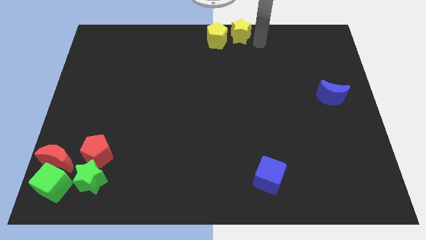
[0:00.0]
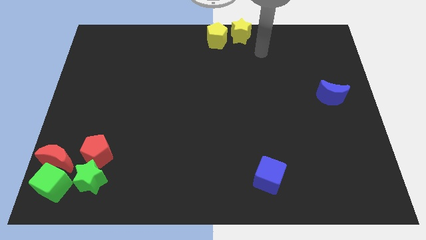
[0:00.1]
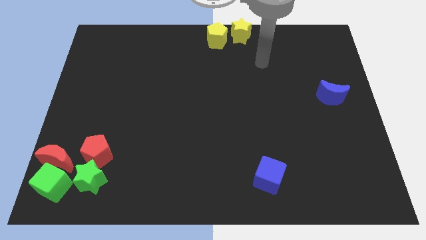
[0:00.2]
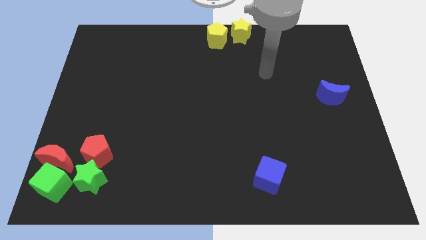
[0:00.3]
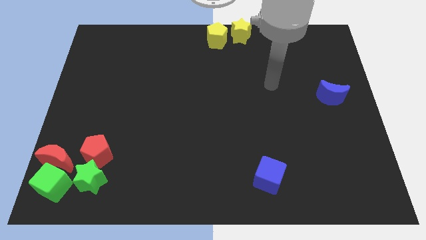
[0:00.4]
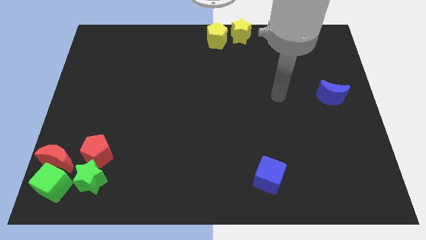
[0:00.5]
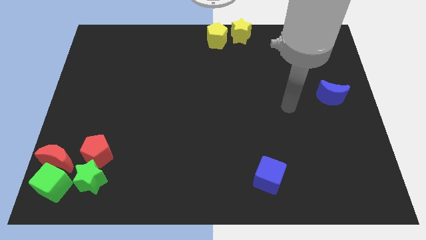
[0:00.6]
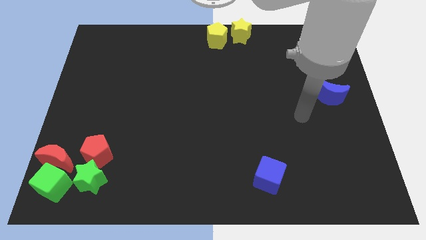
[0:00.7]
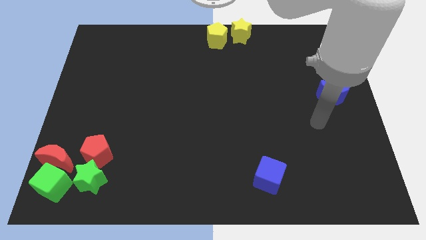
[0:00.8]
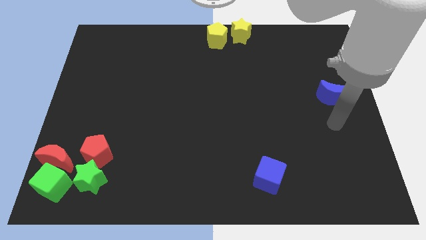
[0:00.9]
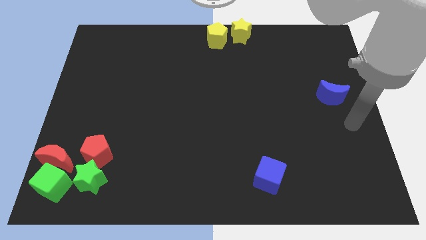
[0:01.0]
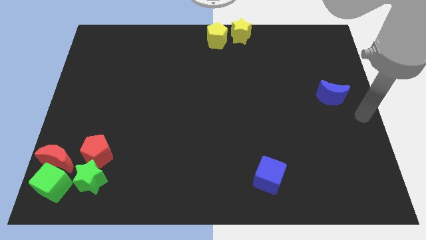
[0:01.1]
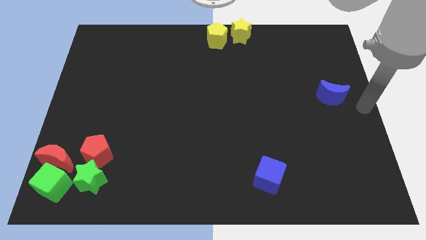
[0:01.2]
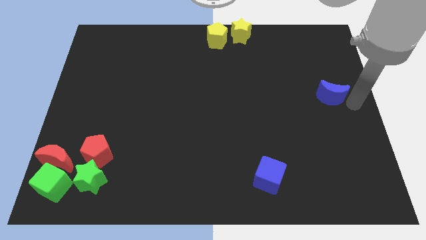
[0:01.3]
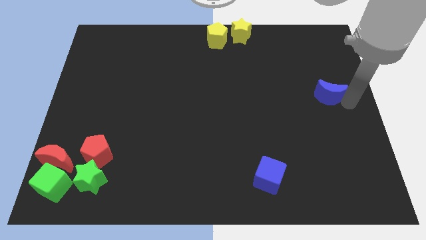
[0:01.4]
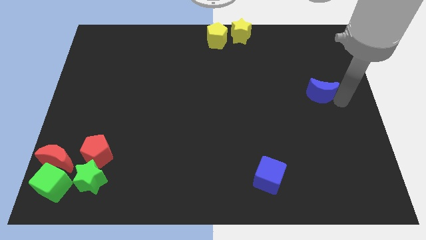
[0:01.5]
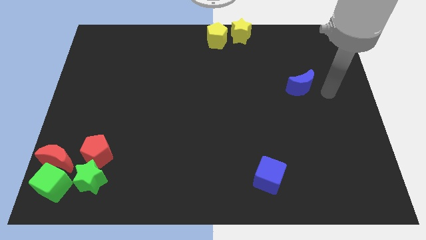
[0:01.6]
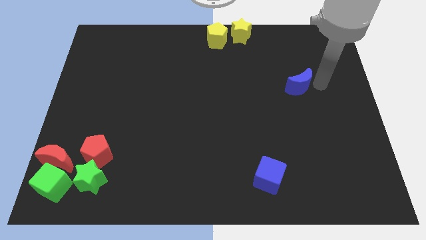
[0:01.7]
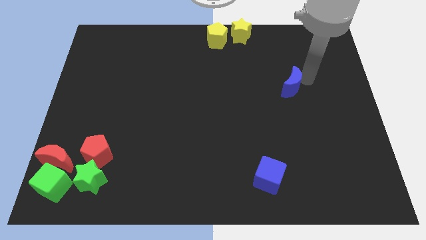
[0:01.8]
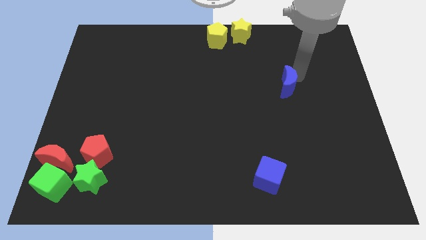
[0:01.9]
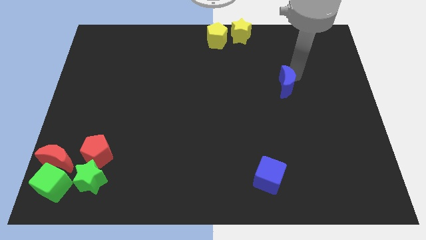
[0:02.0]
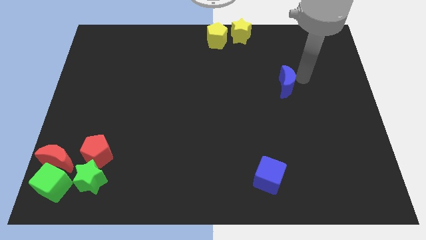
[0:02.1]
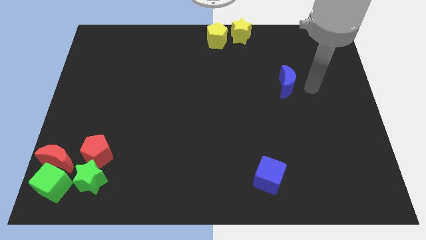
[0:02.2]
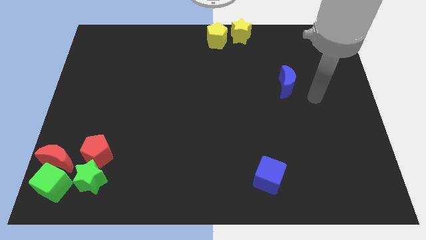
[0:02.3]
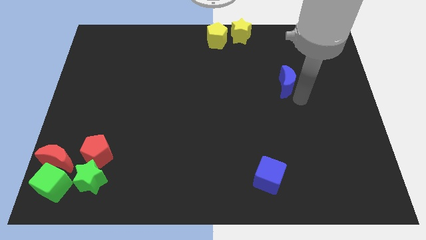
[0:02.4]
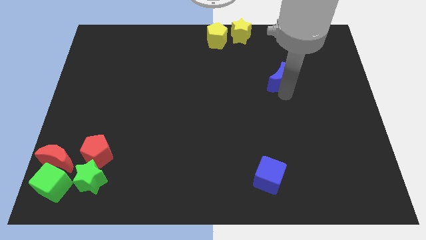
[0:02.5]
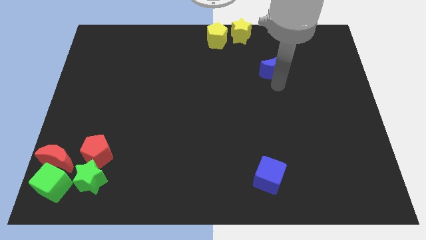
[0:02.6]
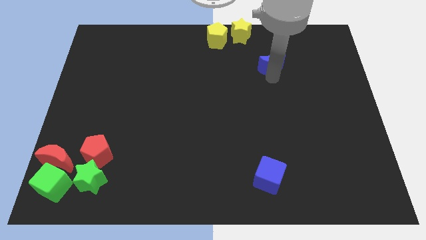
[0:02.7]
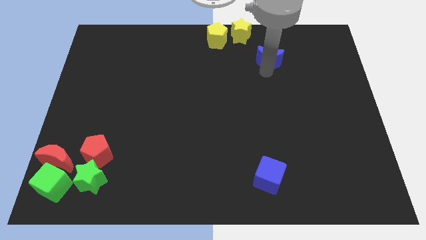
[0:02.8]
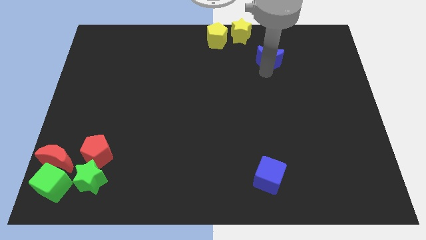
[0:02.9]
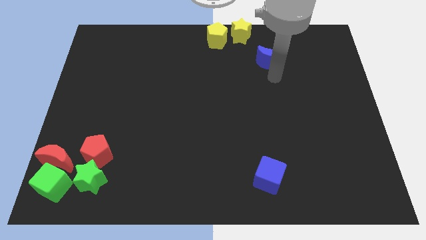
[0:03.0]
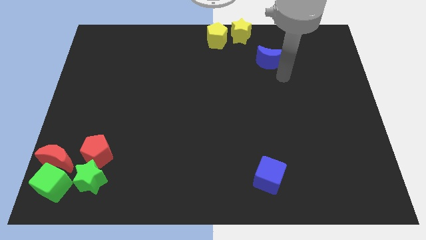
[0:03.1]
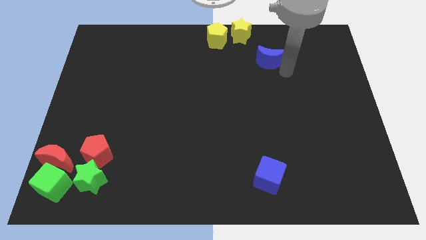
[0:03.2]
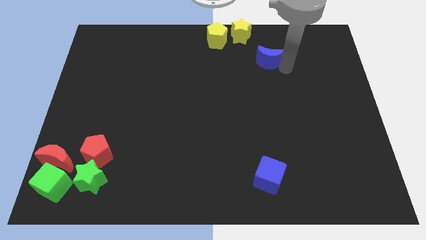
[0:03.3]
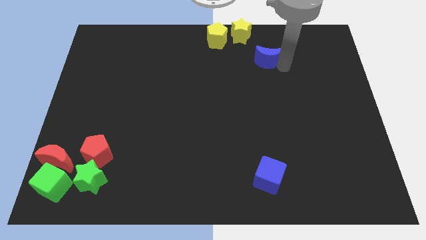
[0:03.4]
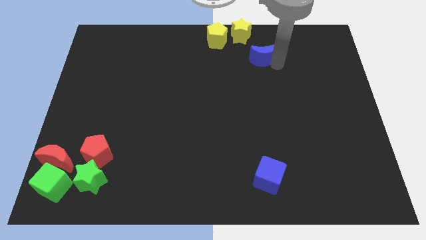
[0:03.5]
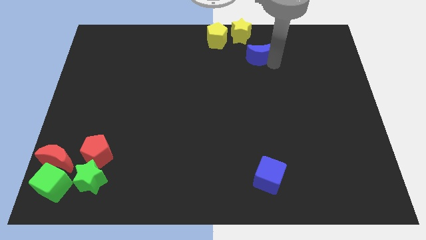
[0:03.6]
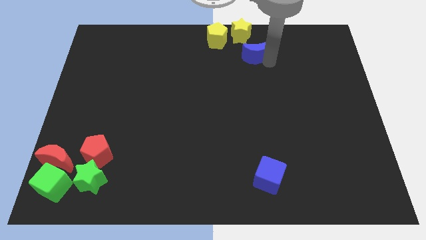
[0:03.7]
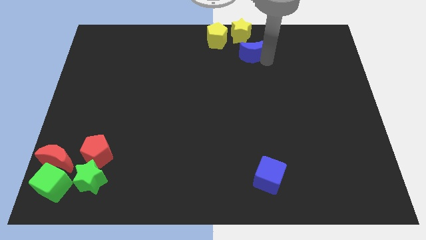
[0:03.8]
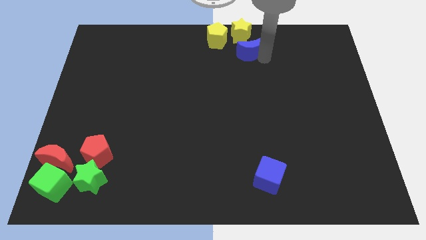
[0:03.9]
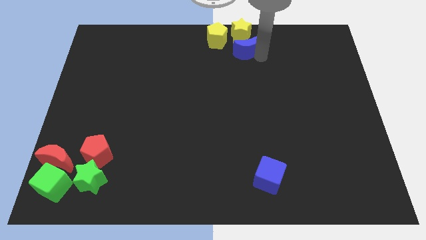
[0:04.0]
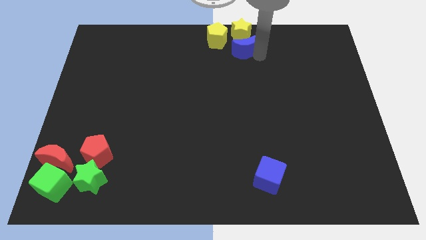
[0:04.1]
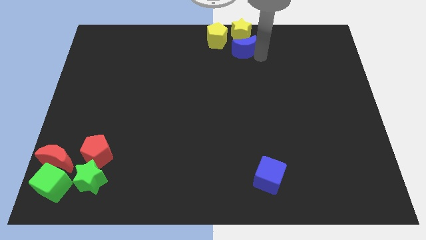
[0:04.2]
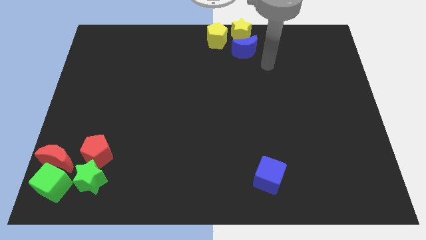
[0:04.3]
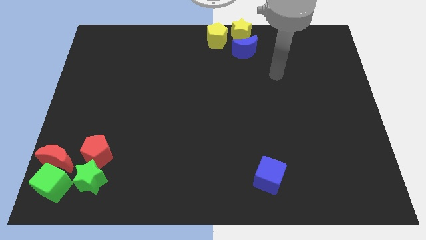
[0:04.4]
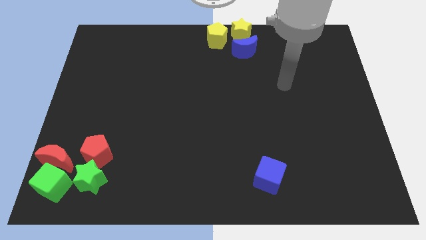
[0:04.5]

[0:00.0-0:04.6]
place the blue crescent below the yellow star

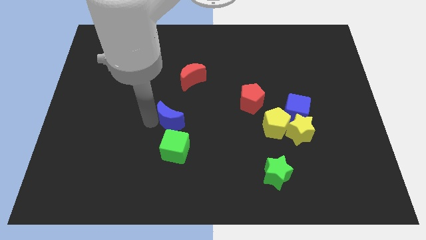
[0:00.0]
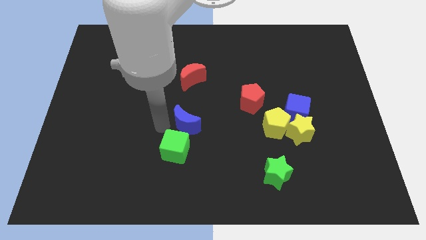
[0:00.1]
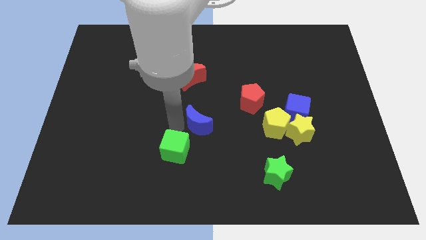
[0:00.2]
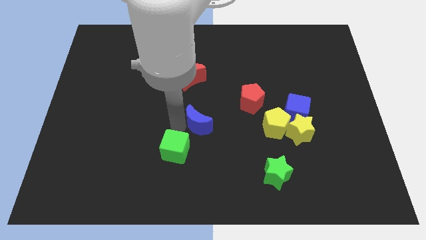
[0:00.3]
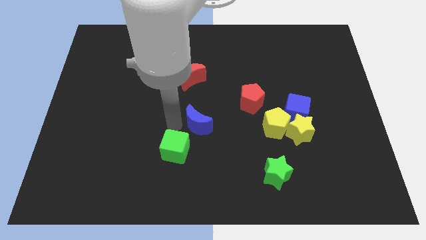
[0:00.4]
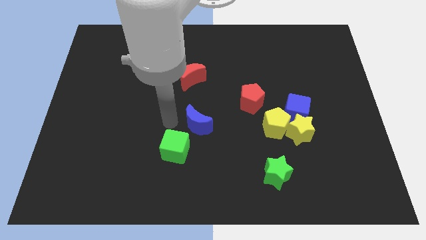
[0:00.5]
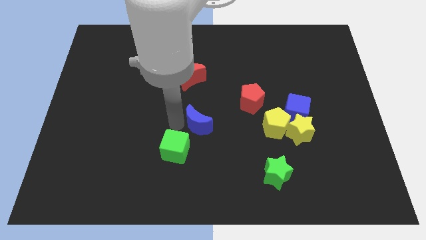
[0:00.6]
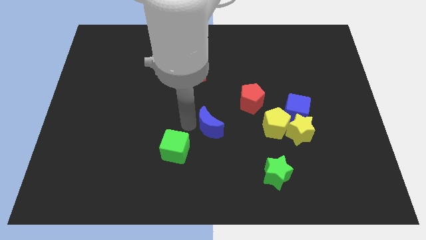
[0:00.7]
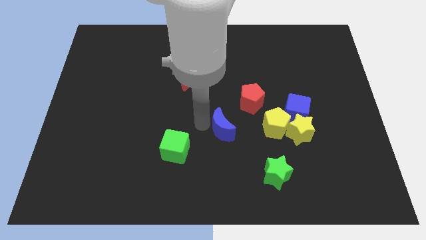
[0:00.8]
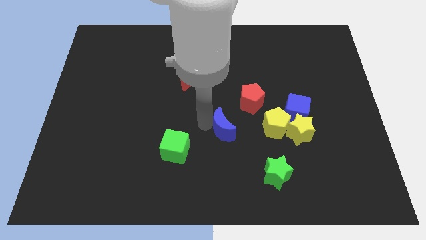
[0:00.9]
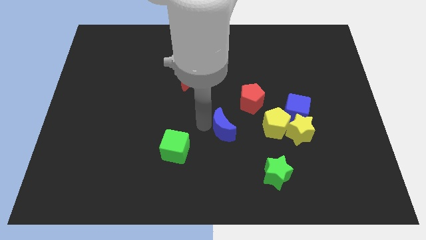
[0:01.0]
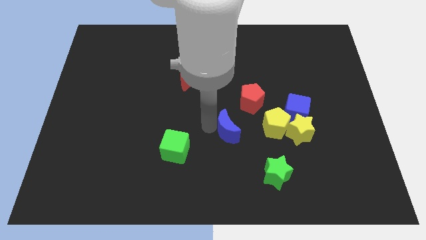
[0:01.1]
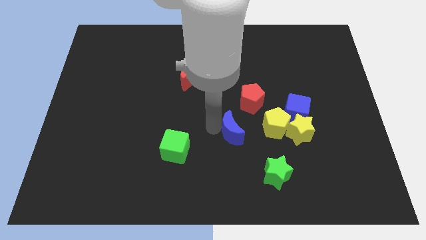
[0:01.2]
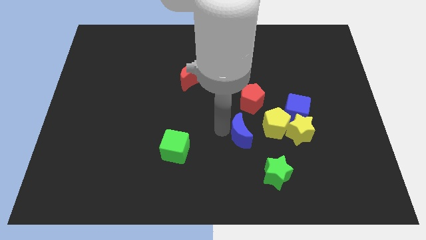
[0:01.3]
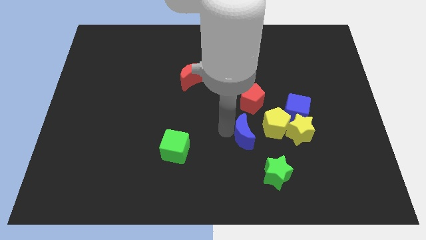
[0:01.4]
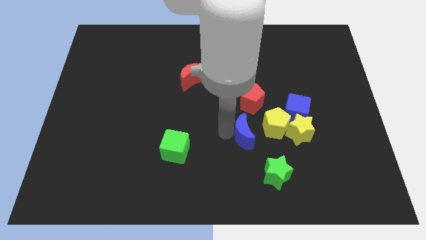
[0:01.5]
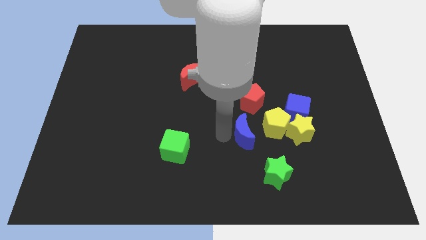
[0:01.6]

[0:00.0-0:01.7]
move blue moon to the bottom of the red pentagon

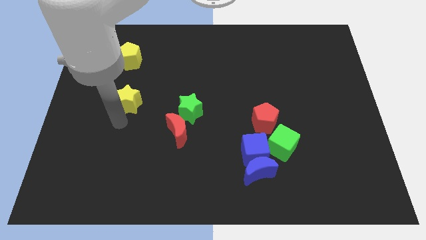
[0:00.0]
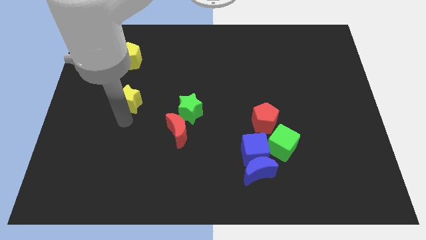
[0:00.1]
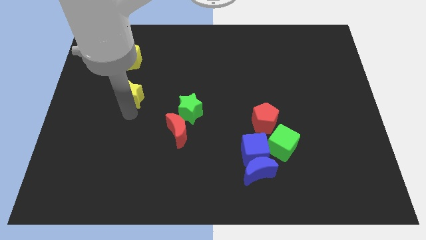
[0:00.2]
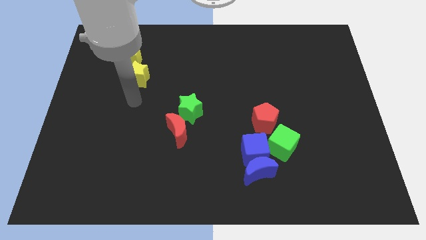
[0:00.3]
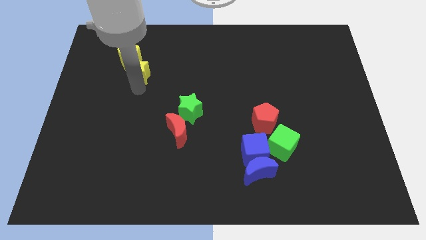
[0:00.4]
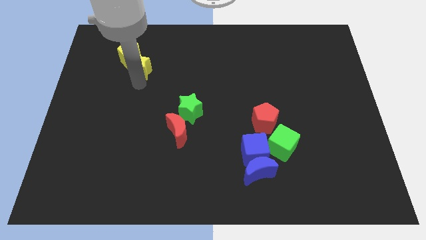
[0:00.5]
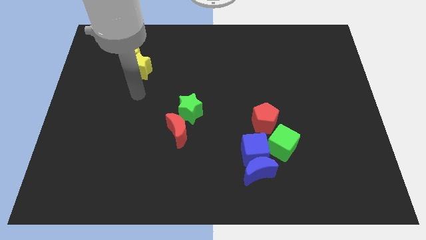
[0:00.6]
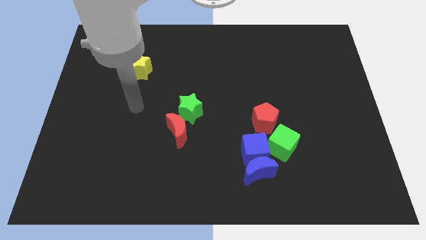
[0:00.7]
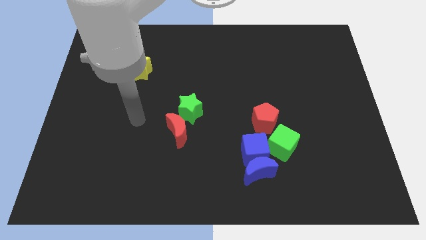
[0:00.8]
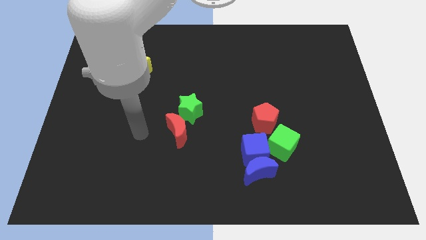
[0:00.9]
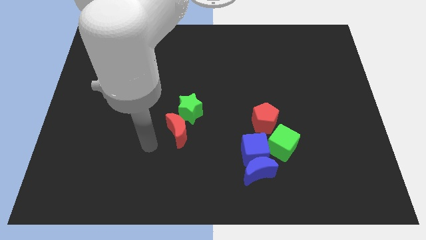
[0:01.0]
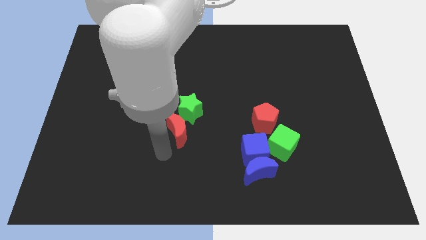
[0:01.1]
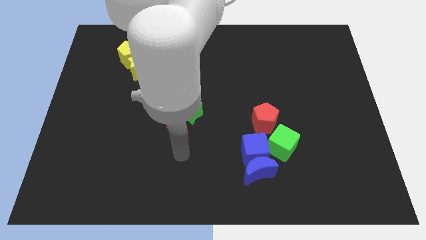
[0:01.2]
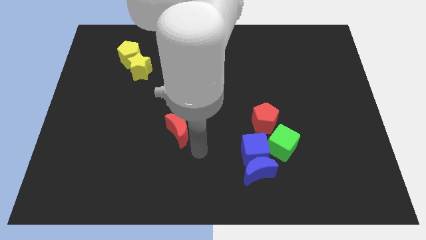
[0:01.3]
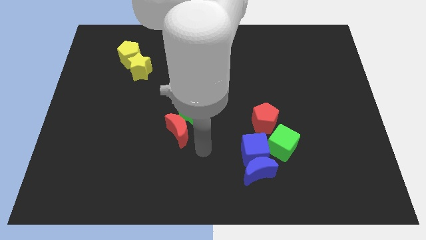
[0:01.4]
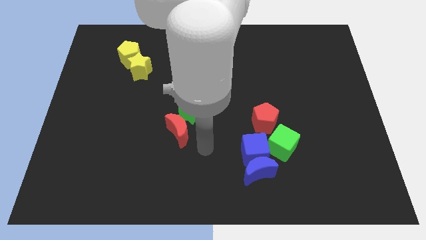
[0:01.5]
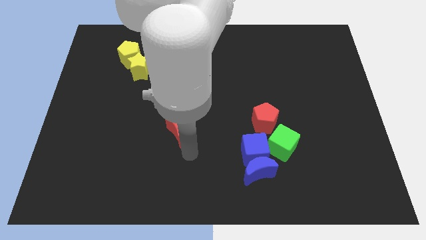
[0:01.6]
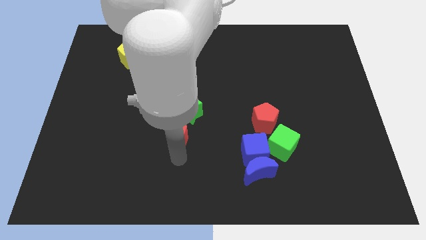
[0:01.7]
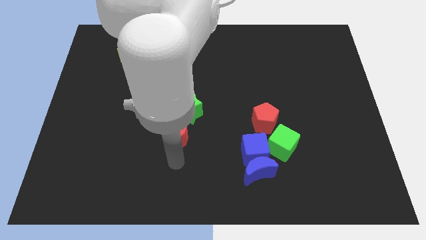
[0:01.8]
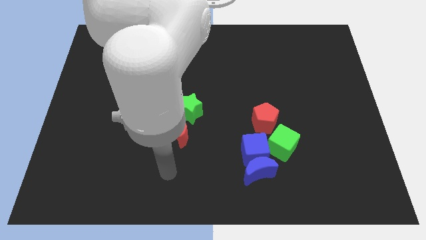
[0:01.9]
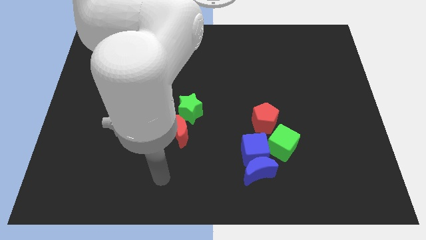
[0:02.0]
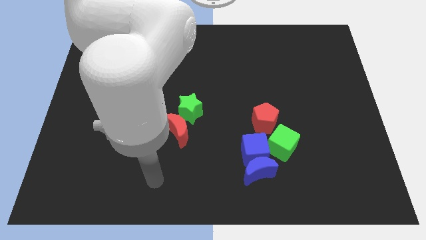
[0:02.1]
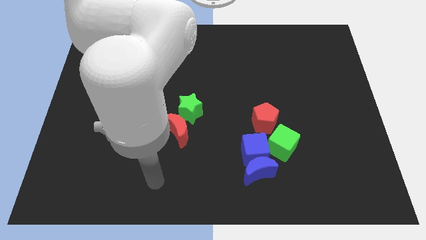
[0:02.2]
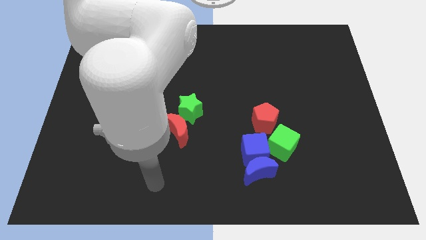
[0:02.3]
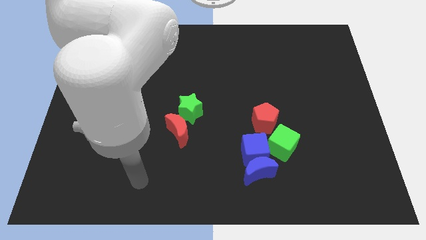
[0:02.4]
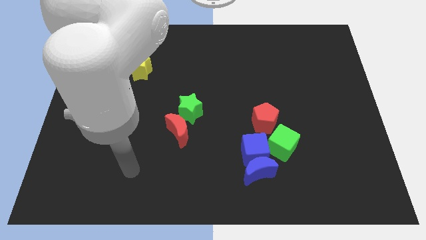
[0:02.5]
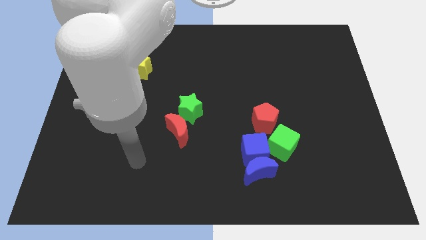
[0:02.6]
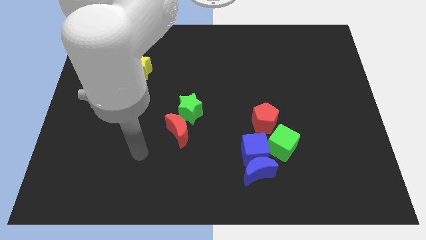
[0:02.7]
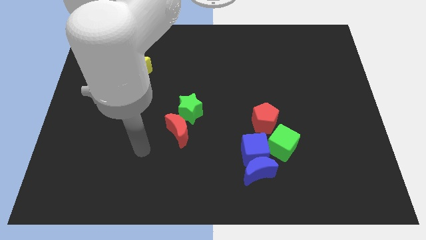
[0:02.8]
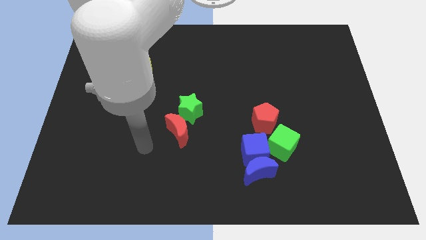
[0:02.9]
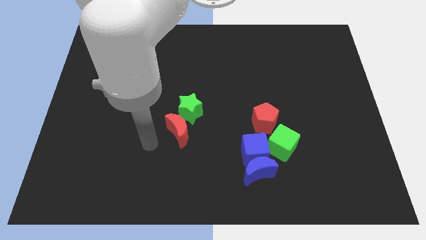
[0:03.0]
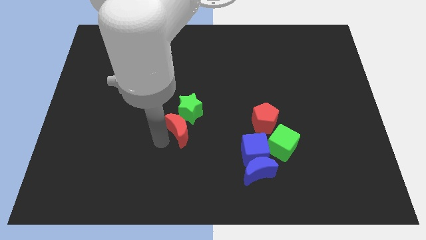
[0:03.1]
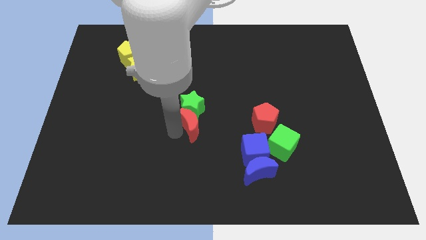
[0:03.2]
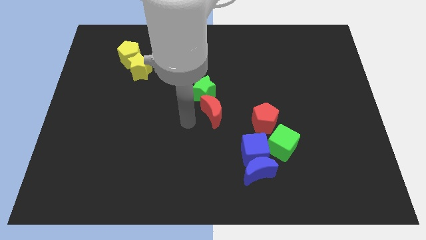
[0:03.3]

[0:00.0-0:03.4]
push the yellow star towards the bottom of yellow petagon
